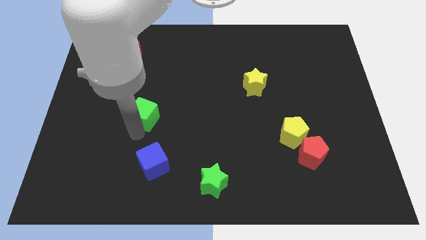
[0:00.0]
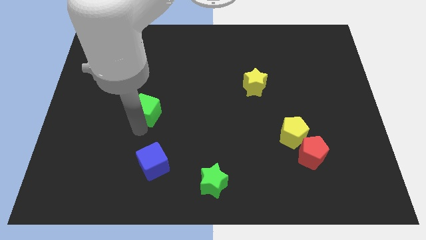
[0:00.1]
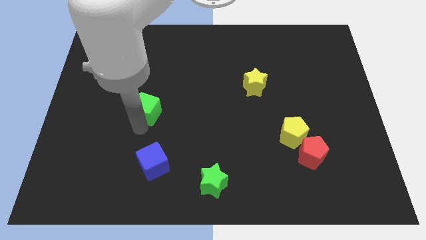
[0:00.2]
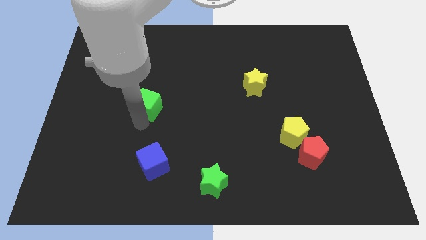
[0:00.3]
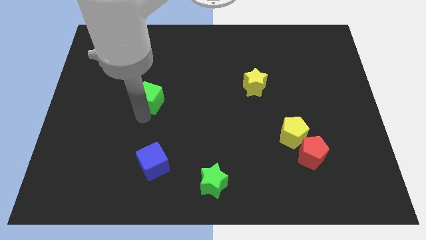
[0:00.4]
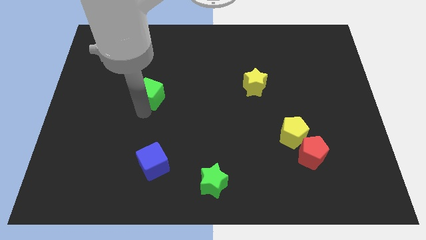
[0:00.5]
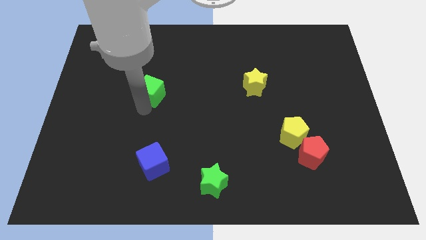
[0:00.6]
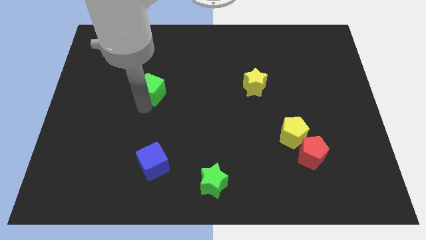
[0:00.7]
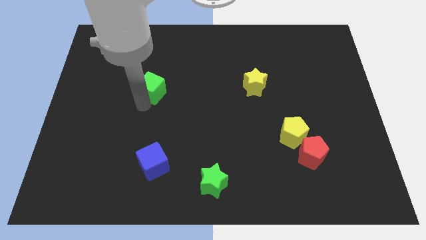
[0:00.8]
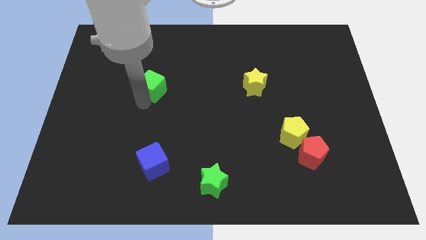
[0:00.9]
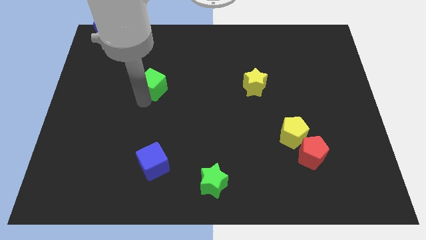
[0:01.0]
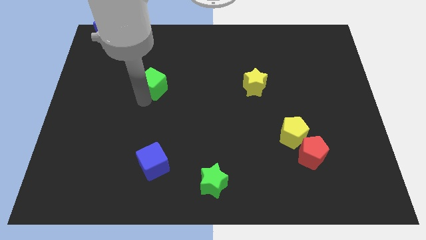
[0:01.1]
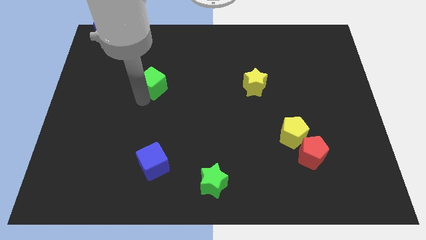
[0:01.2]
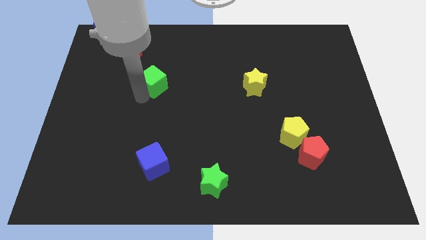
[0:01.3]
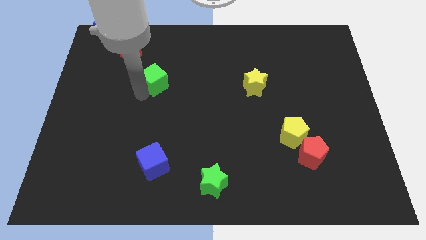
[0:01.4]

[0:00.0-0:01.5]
place the green cube parallel left to the yellow star

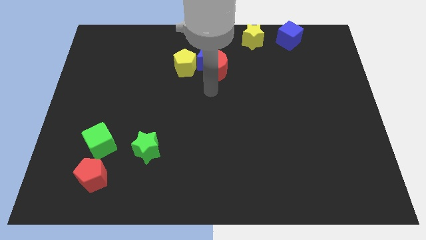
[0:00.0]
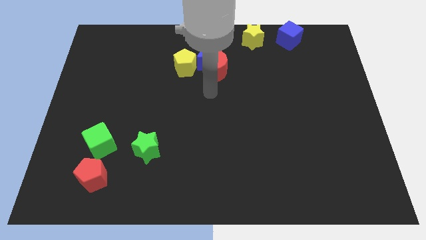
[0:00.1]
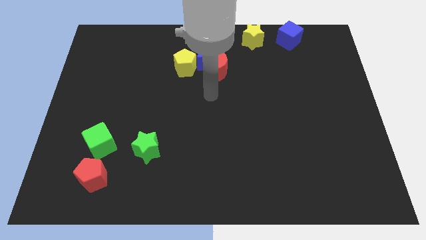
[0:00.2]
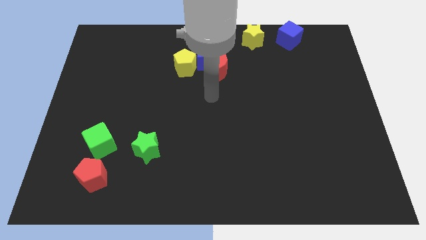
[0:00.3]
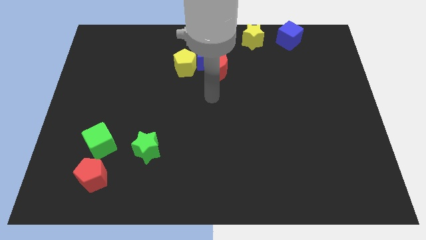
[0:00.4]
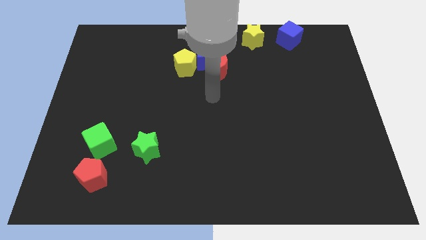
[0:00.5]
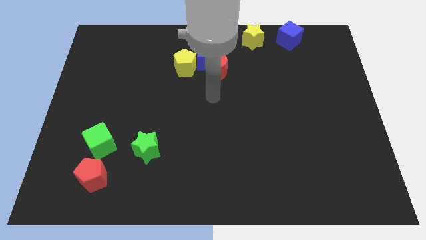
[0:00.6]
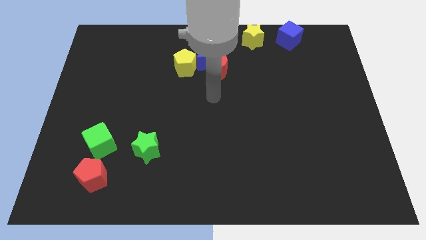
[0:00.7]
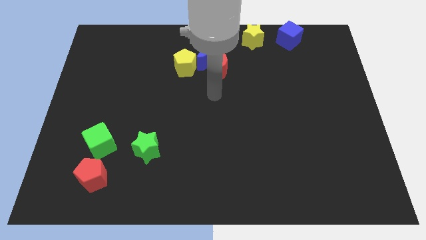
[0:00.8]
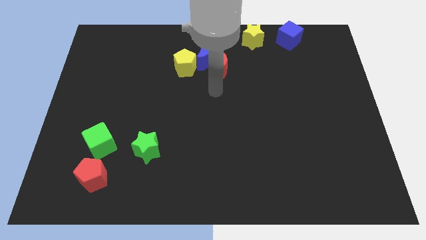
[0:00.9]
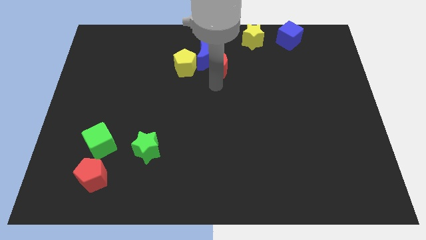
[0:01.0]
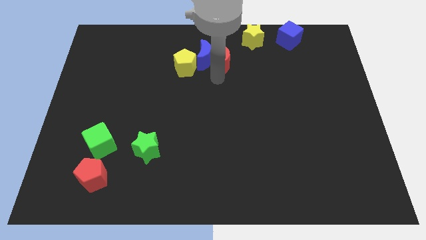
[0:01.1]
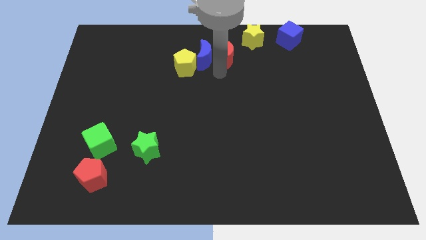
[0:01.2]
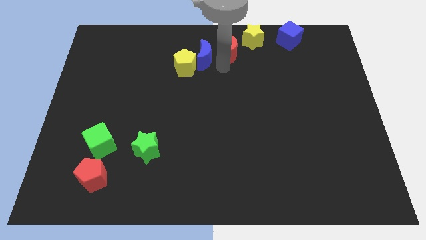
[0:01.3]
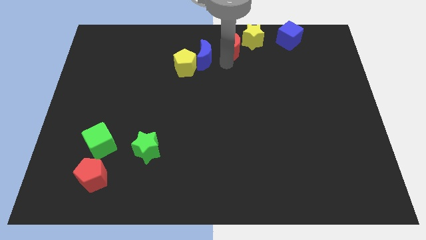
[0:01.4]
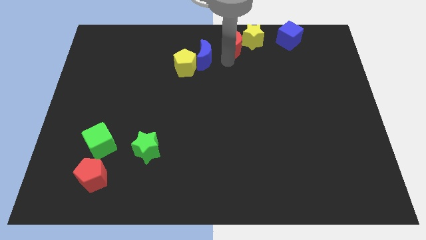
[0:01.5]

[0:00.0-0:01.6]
move the red moon close to yellow star

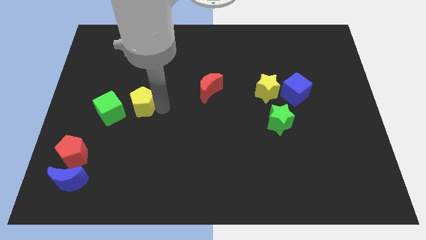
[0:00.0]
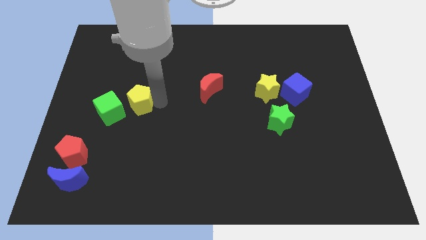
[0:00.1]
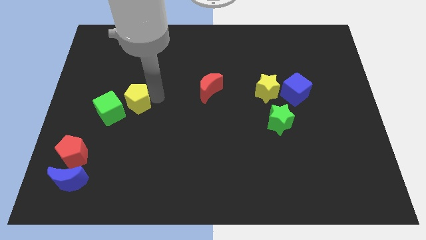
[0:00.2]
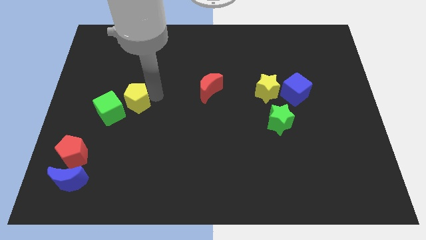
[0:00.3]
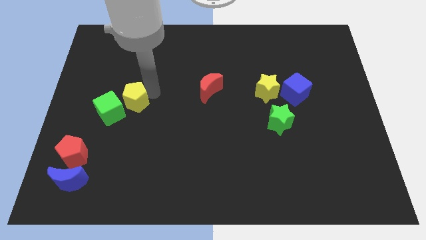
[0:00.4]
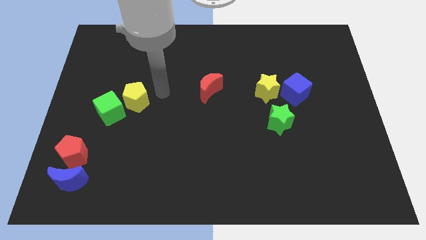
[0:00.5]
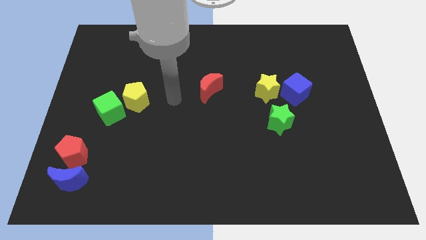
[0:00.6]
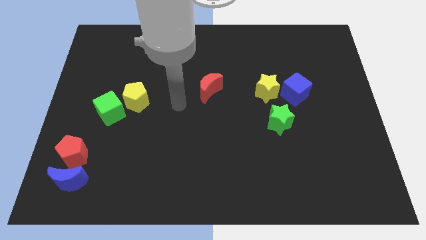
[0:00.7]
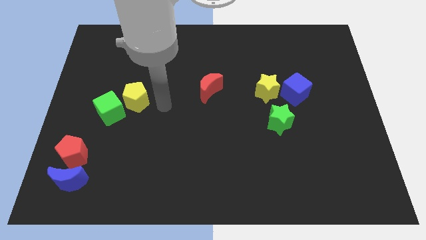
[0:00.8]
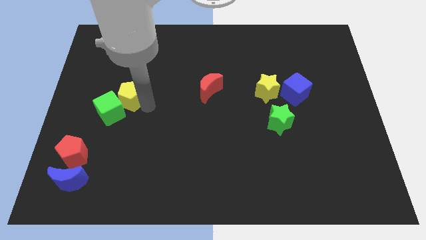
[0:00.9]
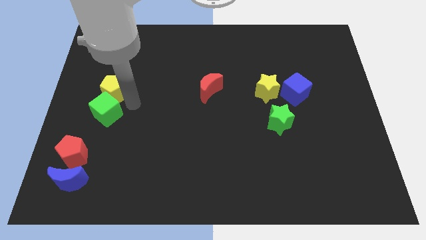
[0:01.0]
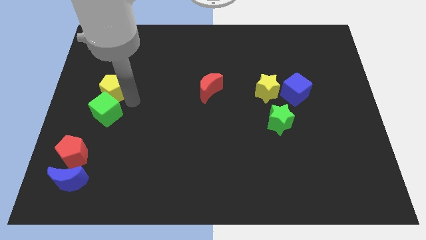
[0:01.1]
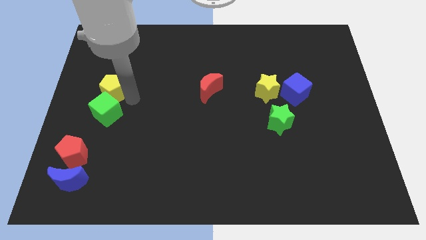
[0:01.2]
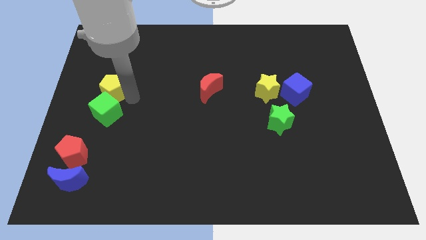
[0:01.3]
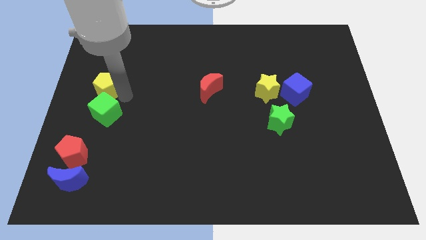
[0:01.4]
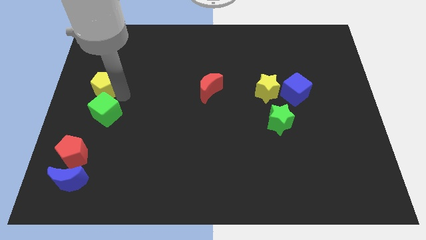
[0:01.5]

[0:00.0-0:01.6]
move the yellow pentagon to the top of the green cube

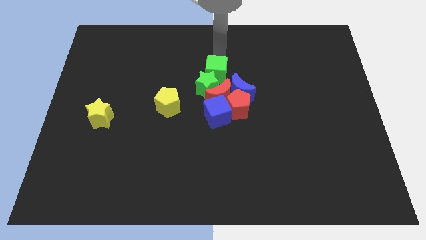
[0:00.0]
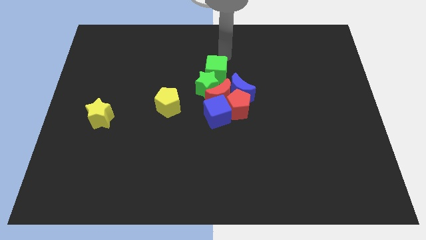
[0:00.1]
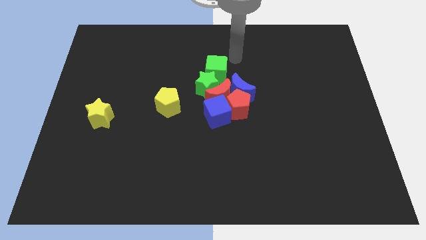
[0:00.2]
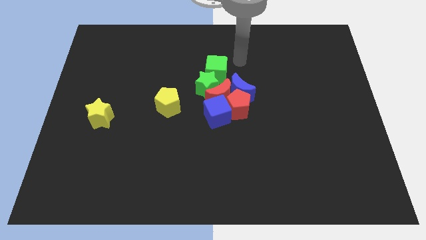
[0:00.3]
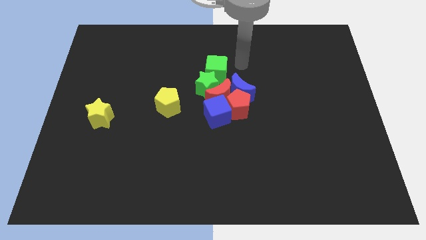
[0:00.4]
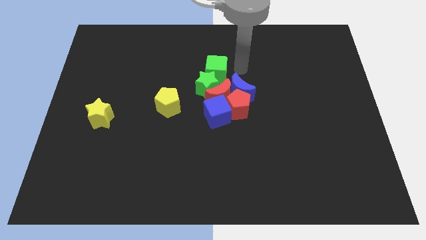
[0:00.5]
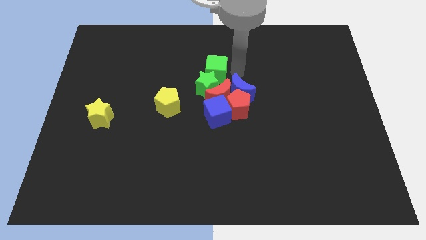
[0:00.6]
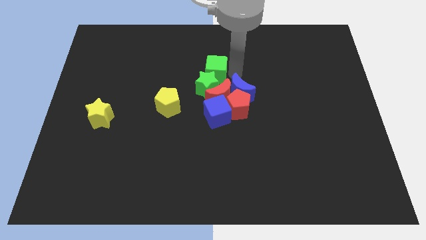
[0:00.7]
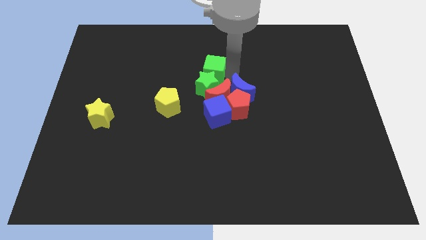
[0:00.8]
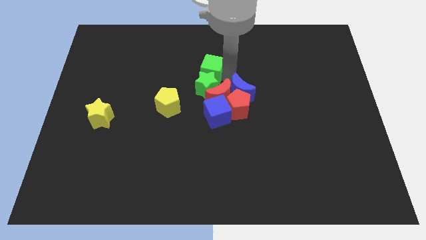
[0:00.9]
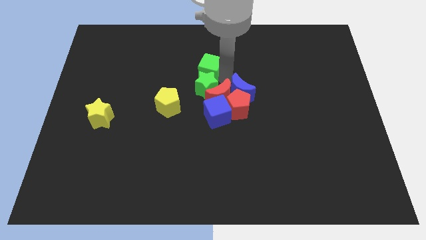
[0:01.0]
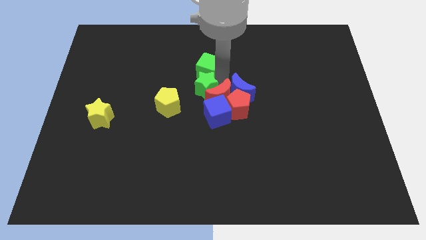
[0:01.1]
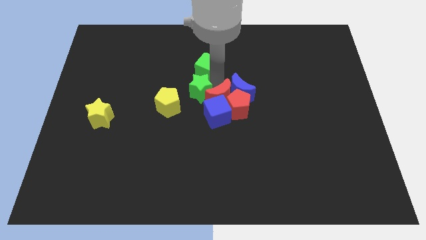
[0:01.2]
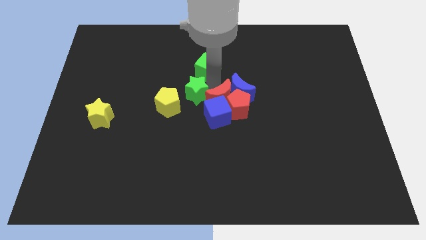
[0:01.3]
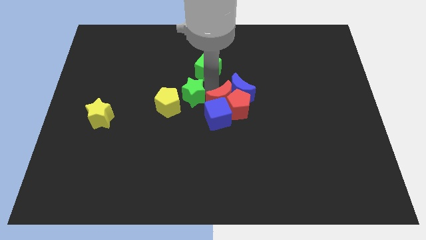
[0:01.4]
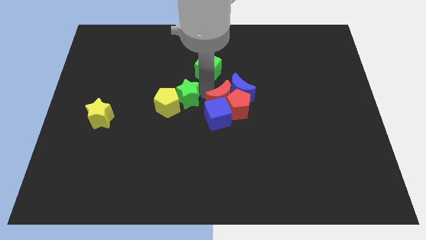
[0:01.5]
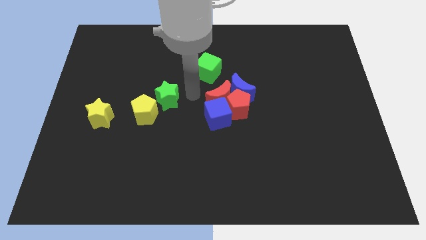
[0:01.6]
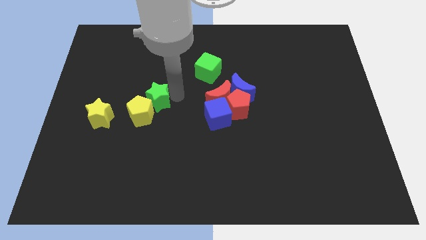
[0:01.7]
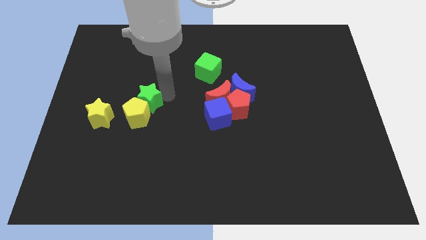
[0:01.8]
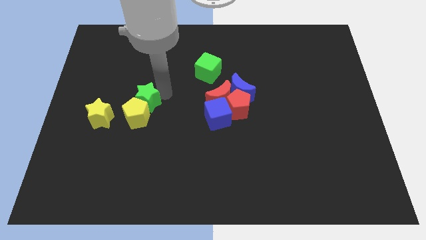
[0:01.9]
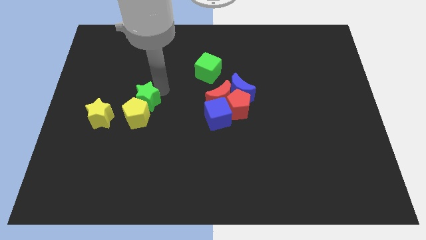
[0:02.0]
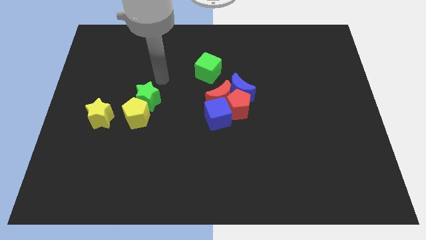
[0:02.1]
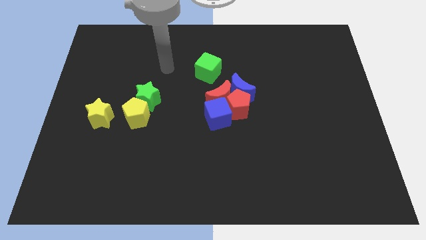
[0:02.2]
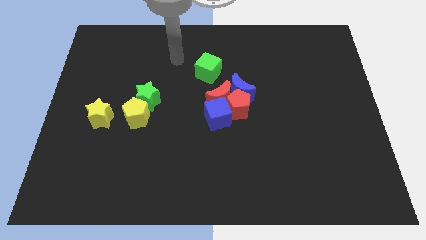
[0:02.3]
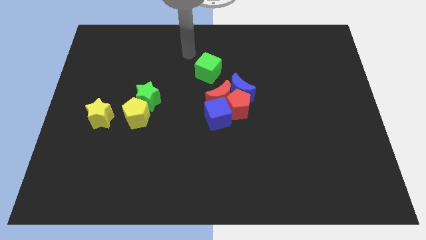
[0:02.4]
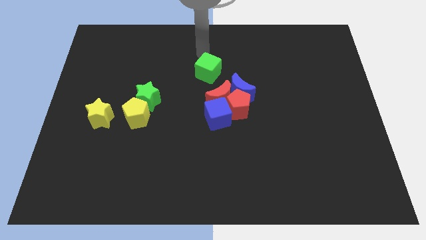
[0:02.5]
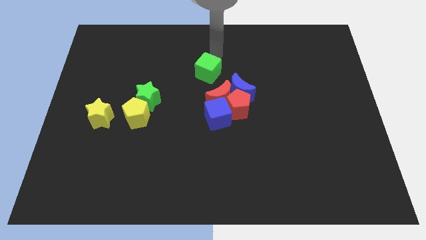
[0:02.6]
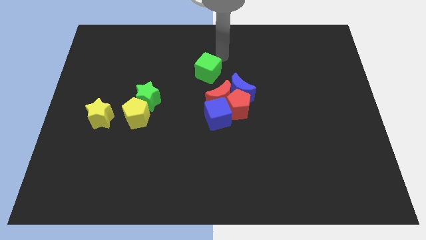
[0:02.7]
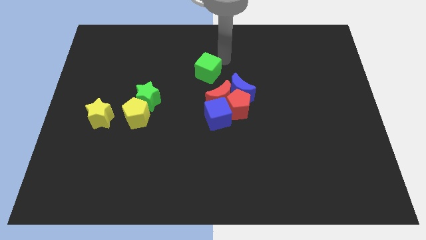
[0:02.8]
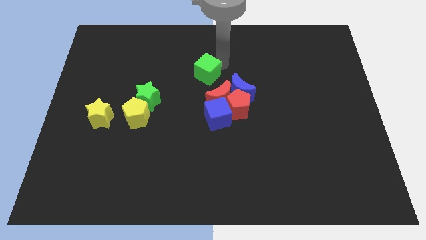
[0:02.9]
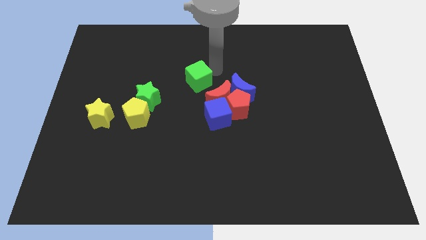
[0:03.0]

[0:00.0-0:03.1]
separate the green star from the green cube

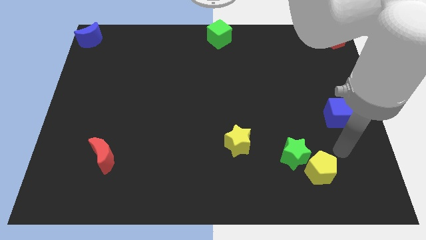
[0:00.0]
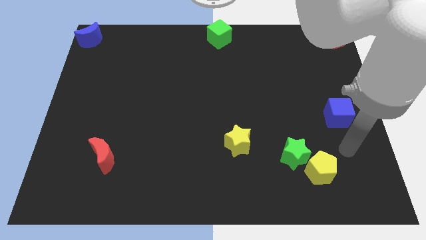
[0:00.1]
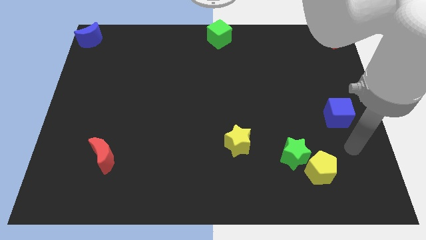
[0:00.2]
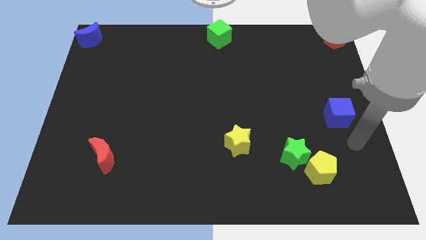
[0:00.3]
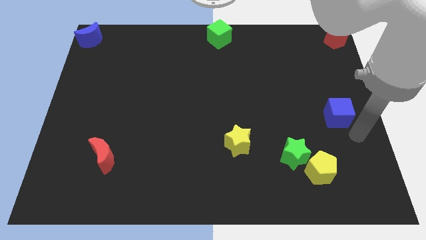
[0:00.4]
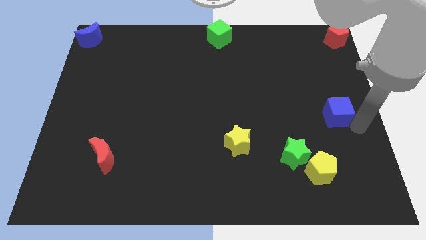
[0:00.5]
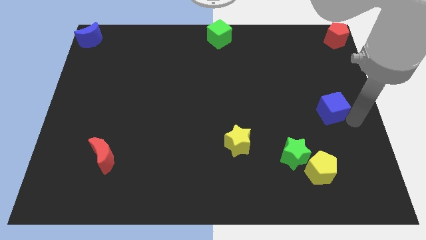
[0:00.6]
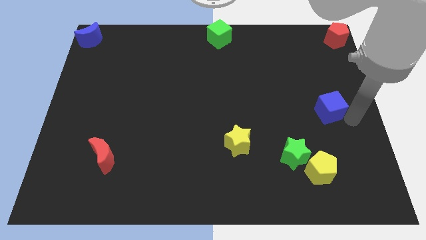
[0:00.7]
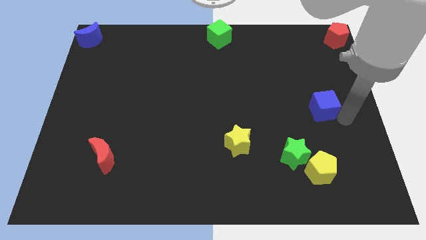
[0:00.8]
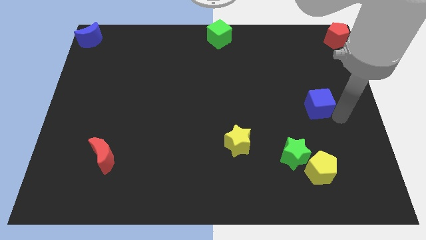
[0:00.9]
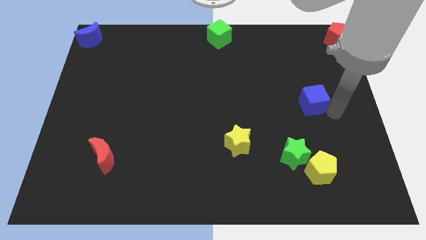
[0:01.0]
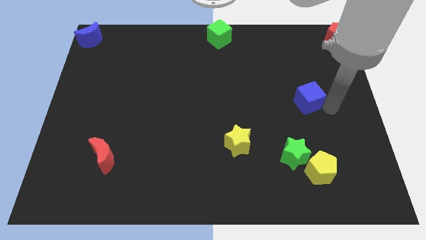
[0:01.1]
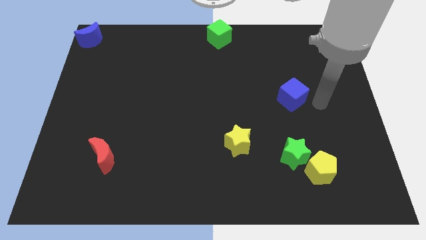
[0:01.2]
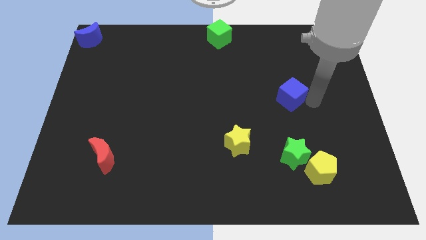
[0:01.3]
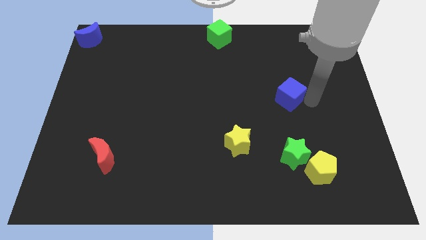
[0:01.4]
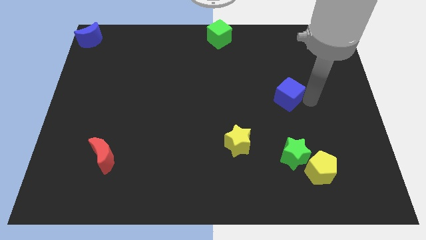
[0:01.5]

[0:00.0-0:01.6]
place the blue cube above to the green star
